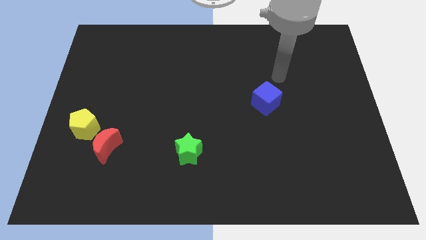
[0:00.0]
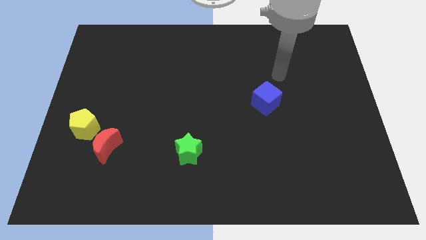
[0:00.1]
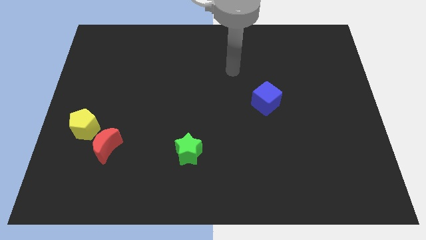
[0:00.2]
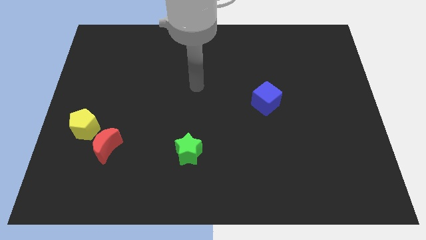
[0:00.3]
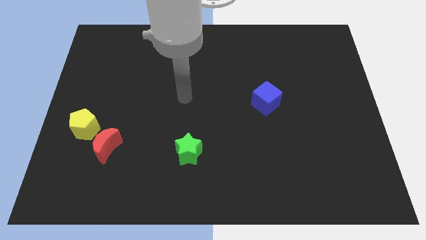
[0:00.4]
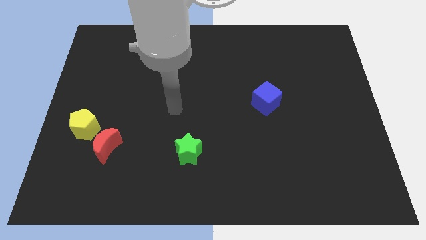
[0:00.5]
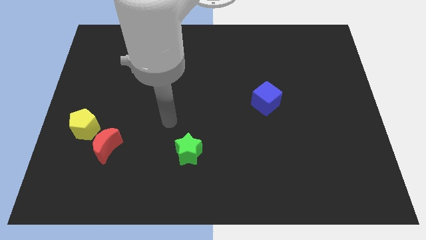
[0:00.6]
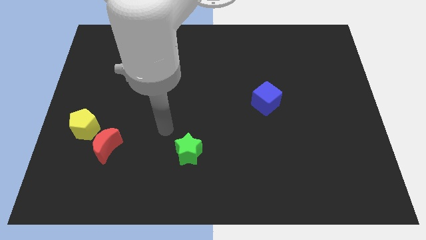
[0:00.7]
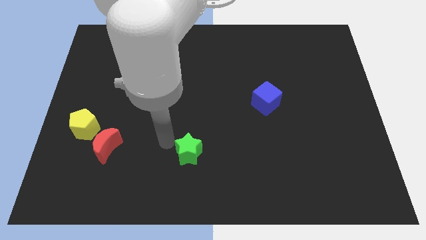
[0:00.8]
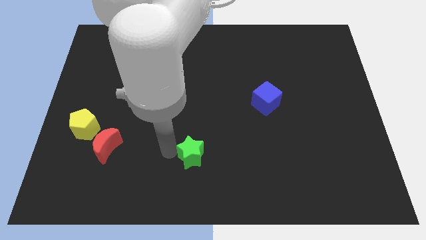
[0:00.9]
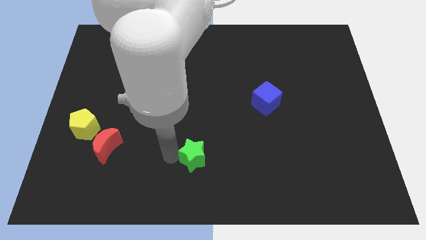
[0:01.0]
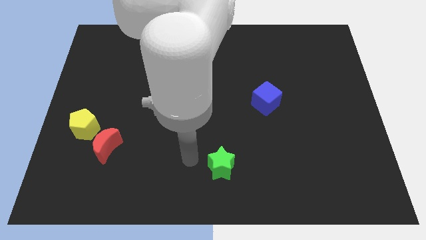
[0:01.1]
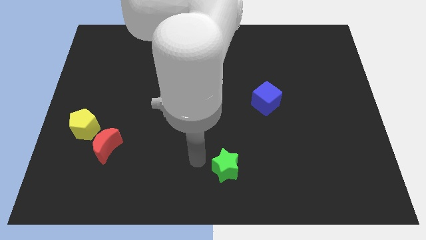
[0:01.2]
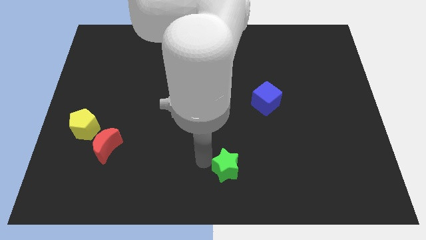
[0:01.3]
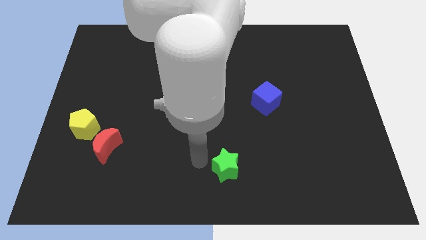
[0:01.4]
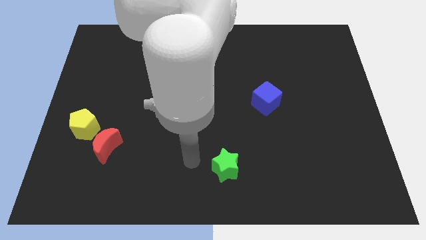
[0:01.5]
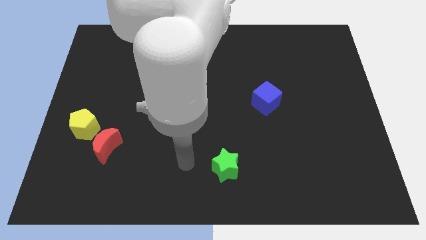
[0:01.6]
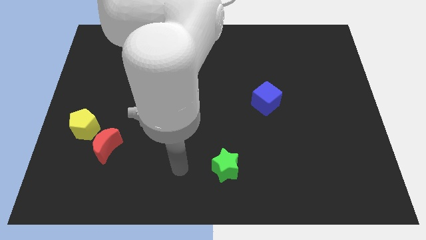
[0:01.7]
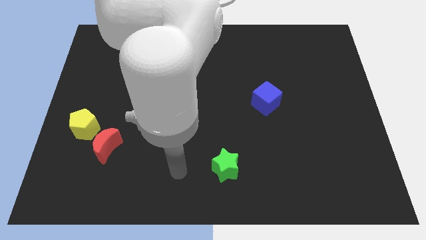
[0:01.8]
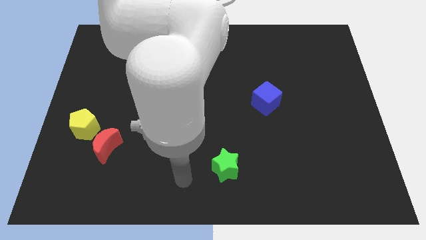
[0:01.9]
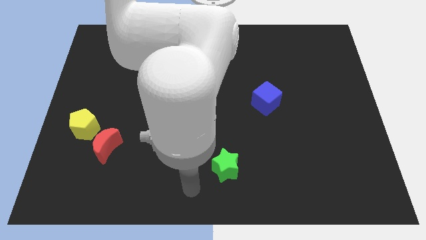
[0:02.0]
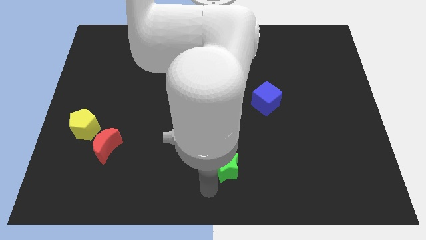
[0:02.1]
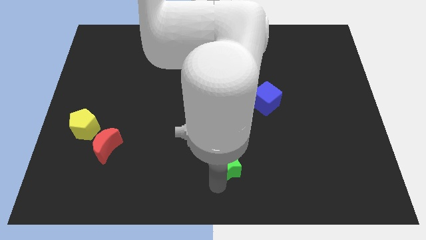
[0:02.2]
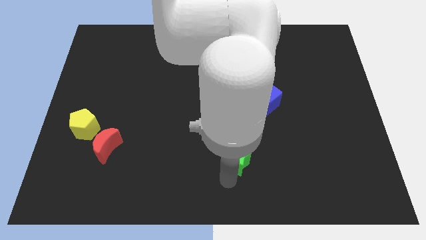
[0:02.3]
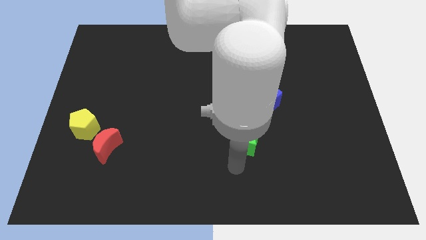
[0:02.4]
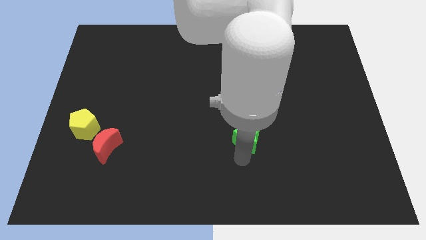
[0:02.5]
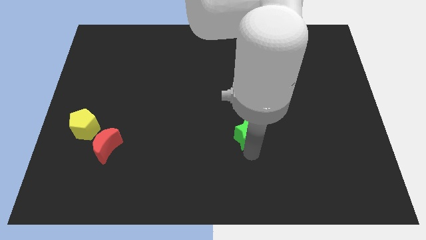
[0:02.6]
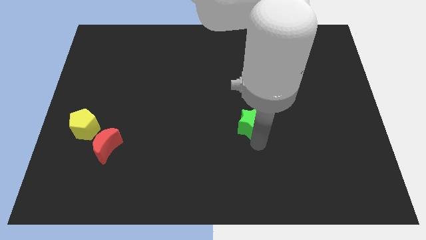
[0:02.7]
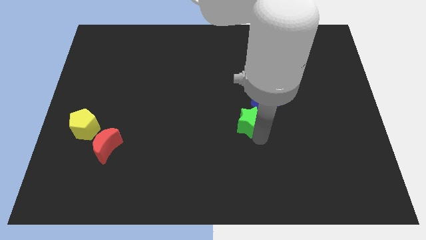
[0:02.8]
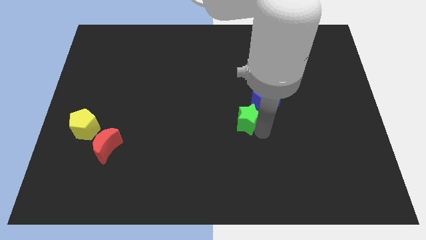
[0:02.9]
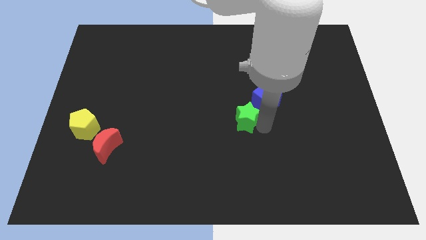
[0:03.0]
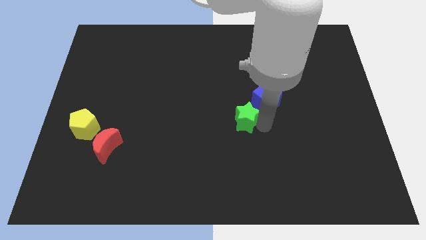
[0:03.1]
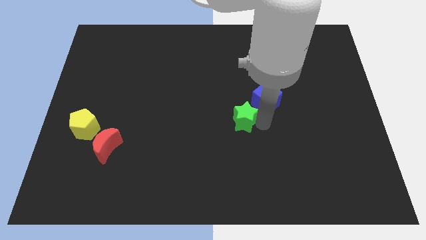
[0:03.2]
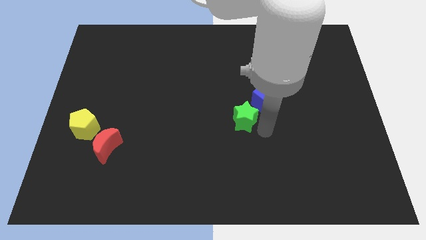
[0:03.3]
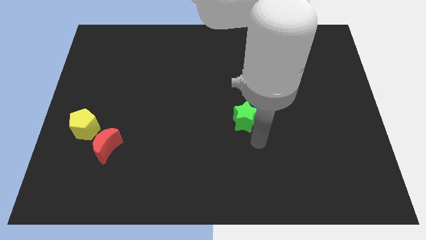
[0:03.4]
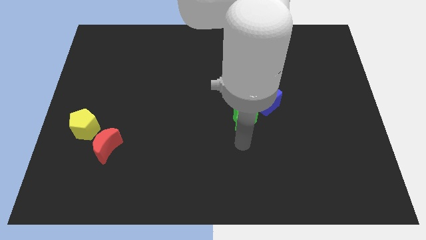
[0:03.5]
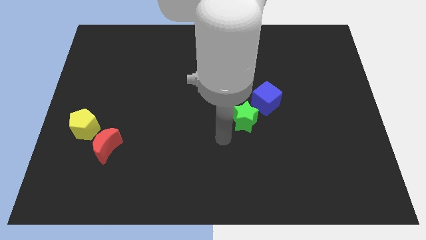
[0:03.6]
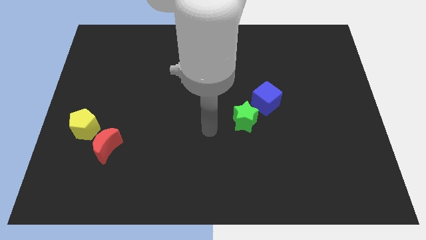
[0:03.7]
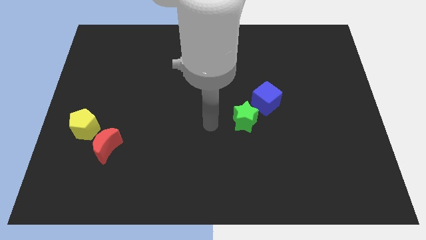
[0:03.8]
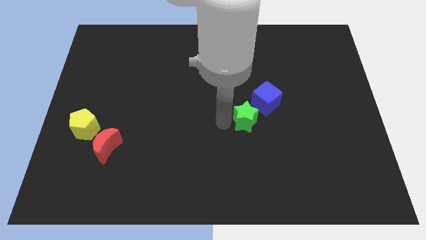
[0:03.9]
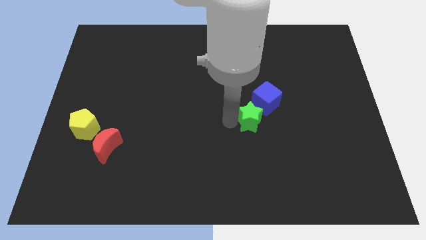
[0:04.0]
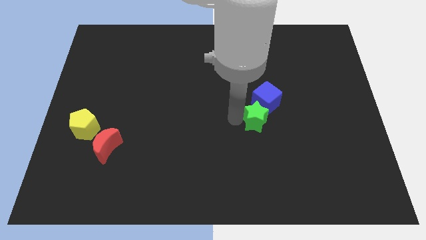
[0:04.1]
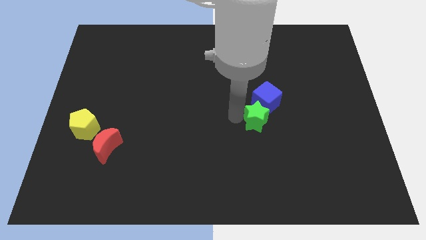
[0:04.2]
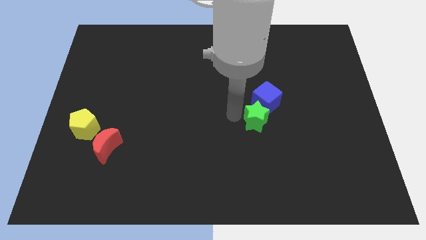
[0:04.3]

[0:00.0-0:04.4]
slide the green block towards the blue block

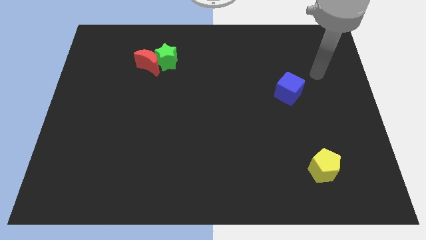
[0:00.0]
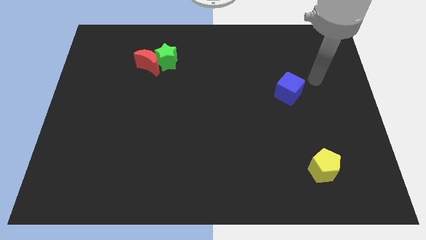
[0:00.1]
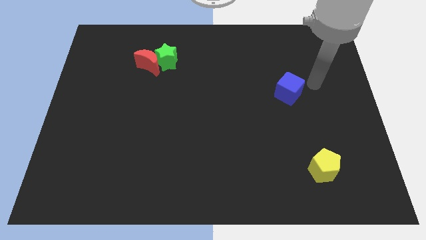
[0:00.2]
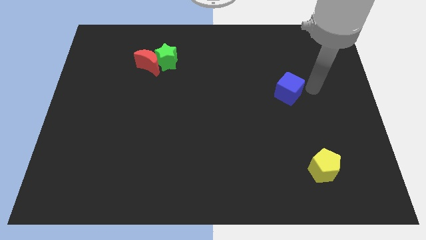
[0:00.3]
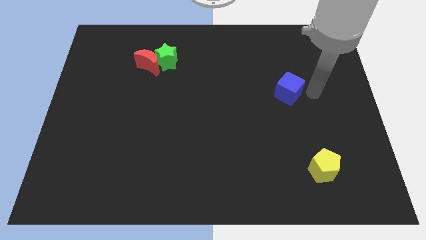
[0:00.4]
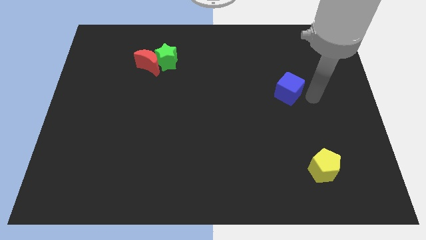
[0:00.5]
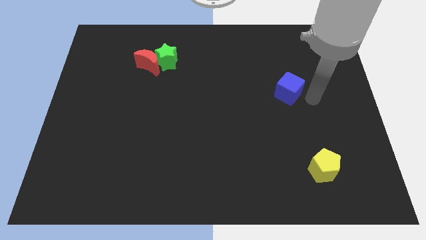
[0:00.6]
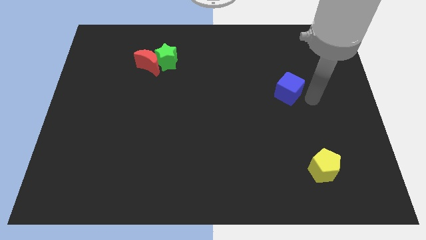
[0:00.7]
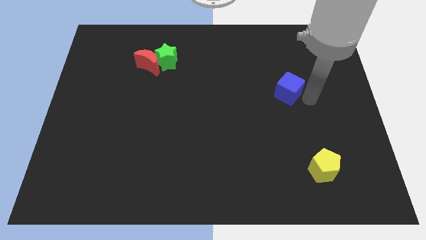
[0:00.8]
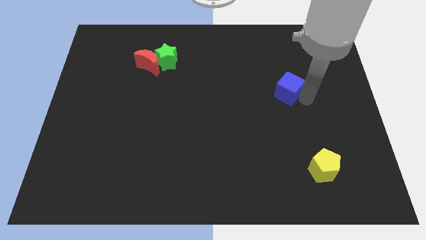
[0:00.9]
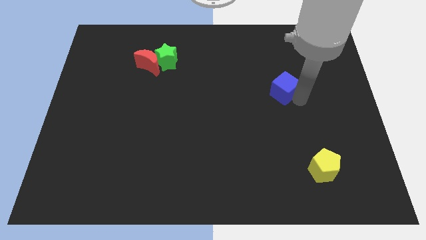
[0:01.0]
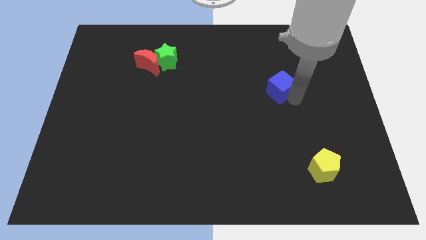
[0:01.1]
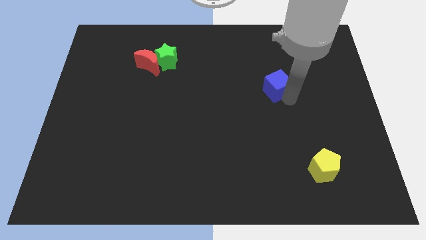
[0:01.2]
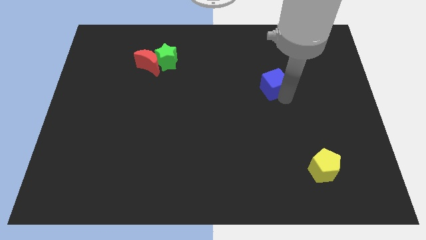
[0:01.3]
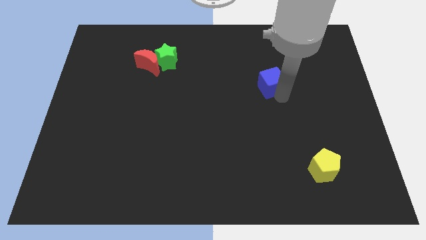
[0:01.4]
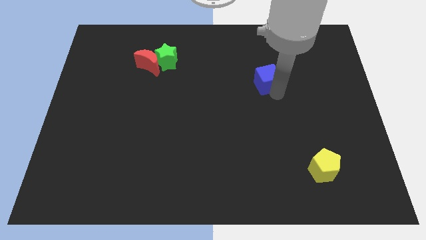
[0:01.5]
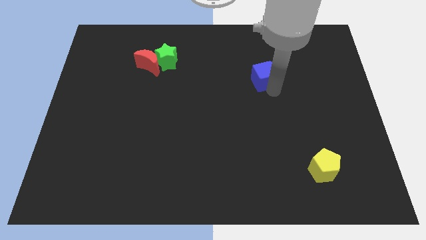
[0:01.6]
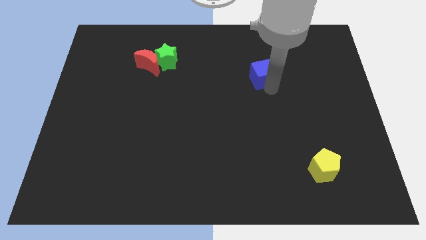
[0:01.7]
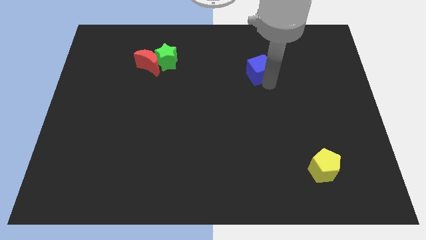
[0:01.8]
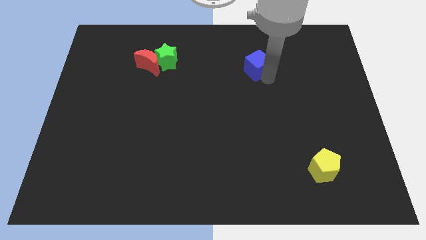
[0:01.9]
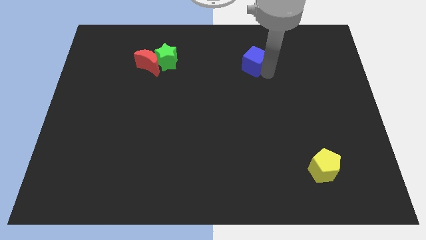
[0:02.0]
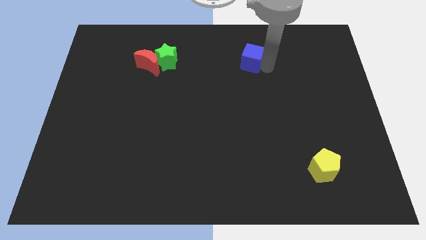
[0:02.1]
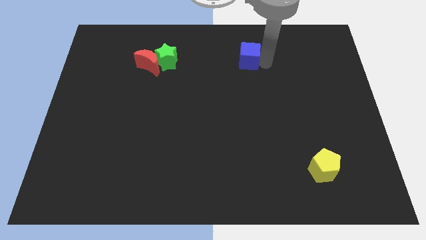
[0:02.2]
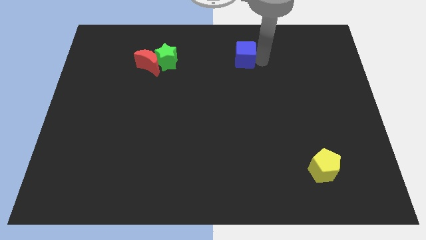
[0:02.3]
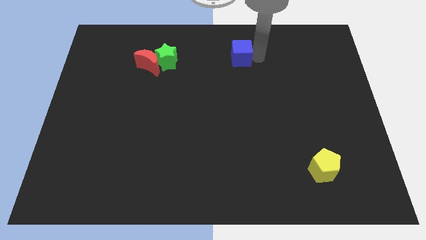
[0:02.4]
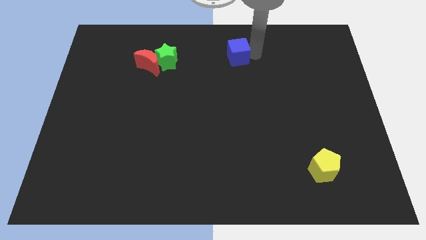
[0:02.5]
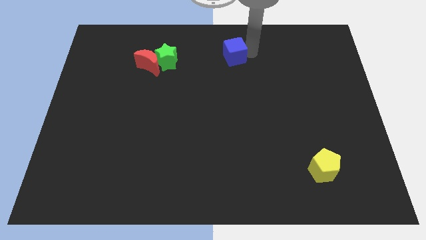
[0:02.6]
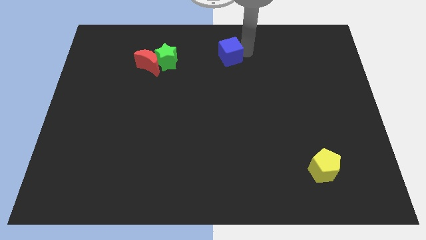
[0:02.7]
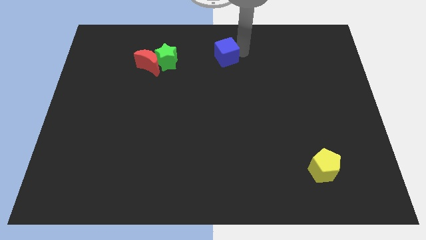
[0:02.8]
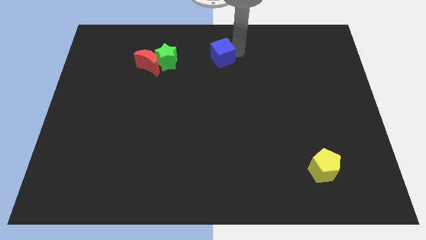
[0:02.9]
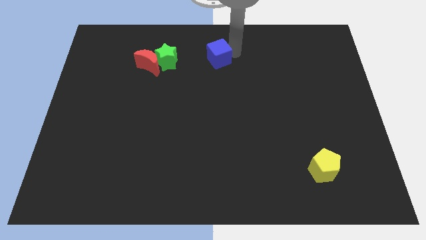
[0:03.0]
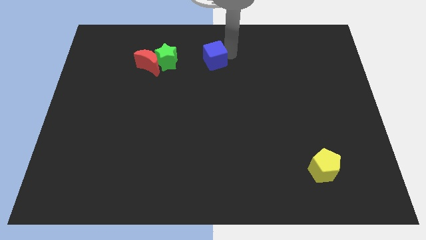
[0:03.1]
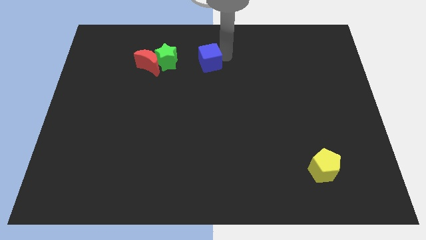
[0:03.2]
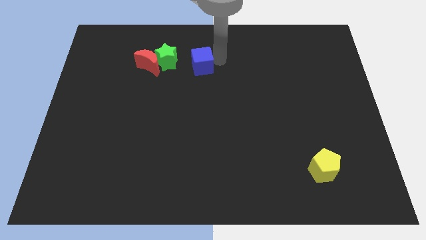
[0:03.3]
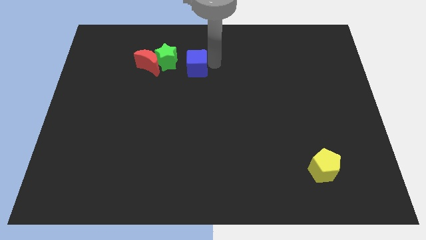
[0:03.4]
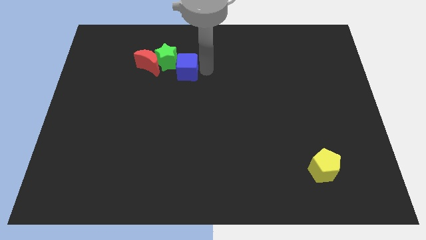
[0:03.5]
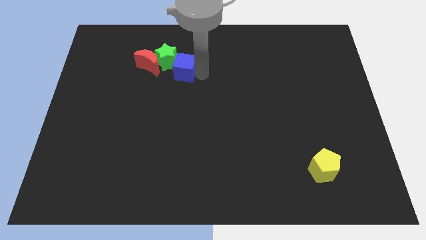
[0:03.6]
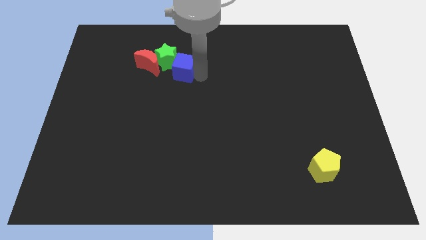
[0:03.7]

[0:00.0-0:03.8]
move the cube close to the green block

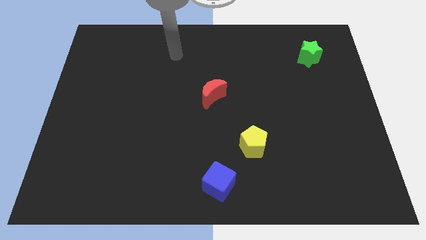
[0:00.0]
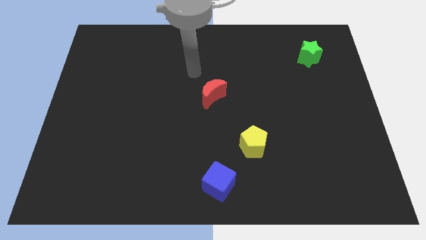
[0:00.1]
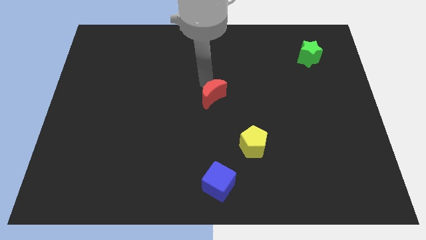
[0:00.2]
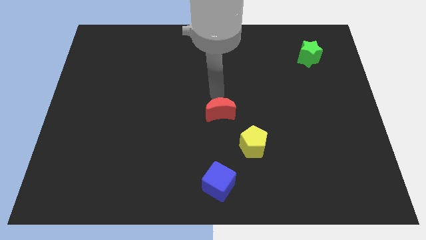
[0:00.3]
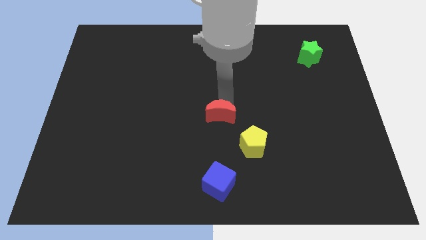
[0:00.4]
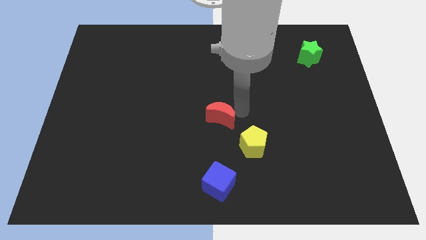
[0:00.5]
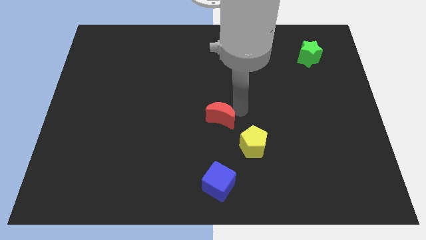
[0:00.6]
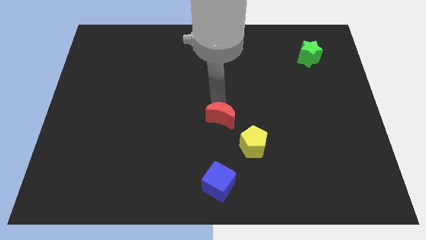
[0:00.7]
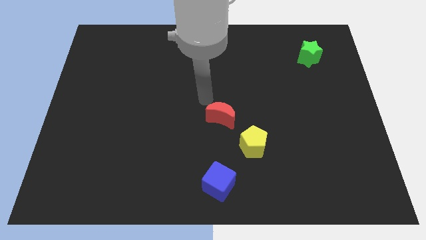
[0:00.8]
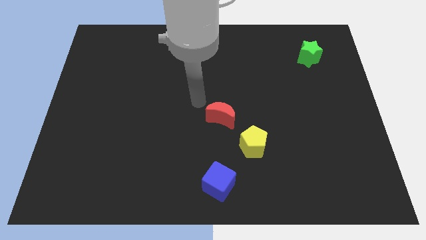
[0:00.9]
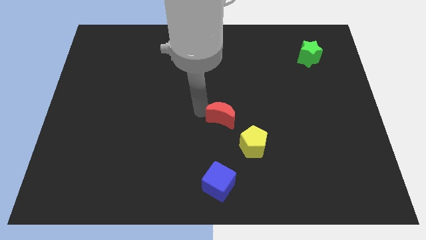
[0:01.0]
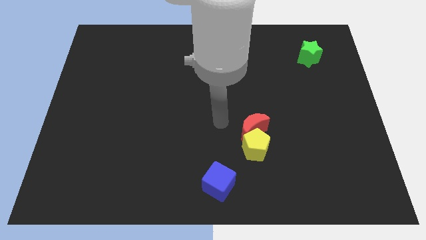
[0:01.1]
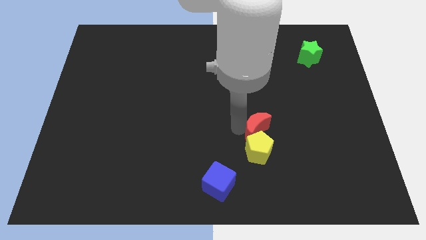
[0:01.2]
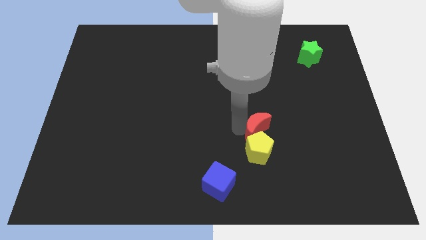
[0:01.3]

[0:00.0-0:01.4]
slide the moon next to the yellow block
